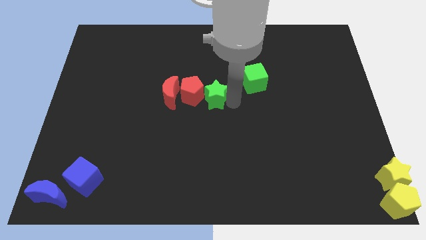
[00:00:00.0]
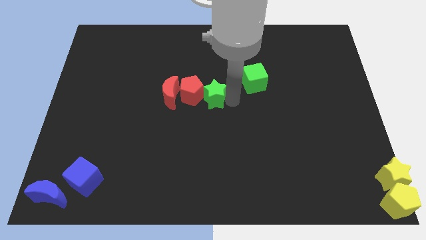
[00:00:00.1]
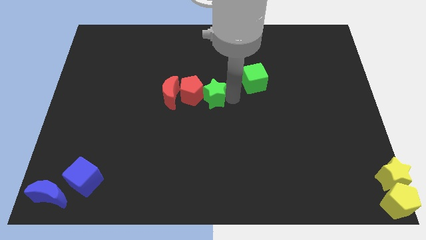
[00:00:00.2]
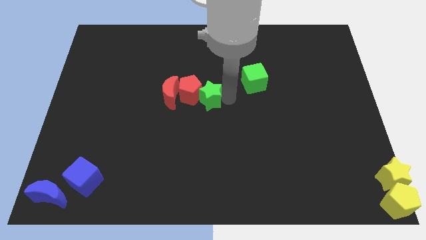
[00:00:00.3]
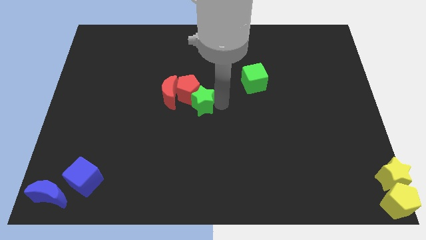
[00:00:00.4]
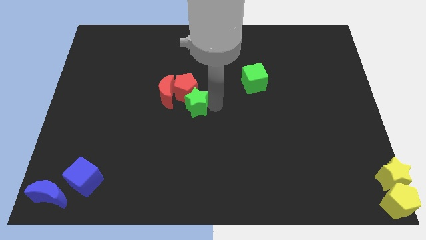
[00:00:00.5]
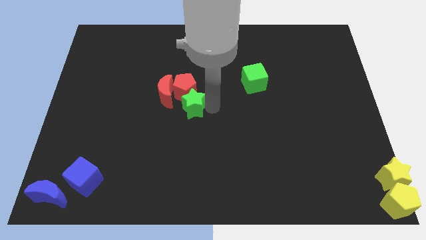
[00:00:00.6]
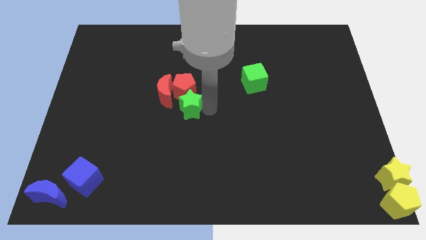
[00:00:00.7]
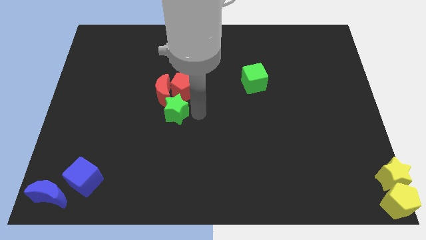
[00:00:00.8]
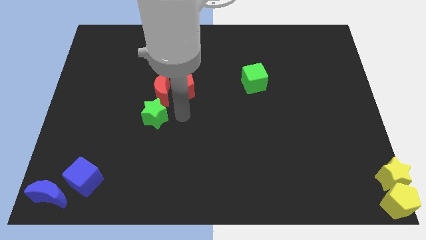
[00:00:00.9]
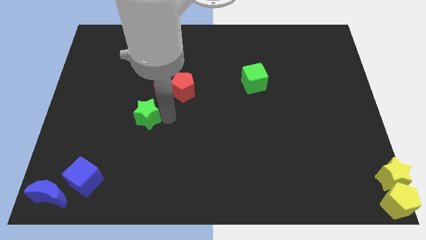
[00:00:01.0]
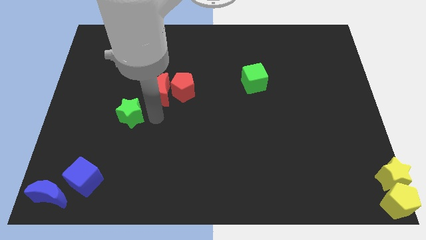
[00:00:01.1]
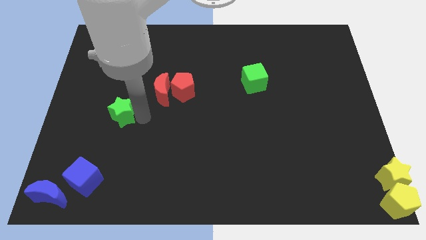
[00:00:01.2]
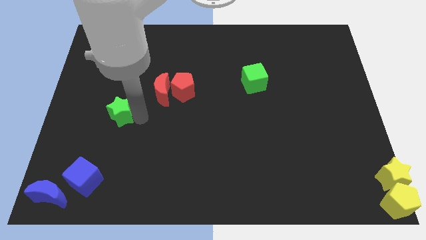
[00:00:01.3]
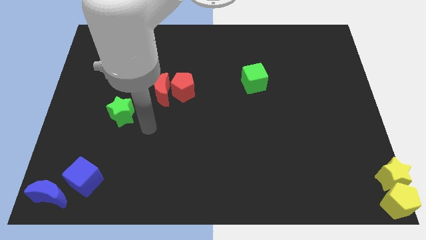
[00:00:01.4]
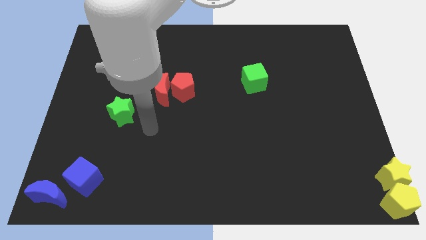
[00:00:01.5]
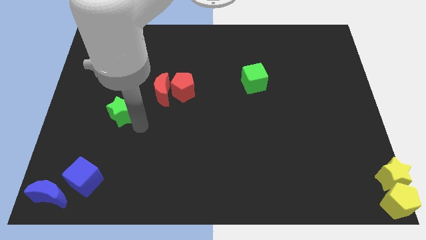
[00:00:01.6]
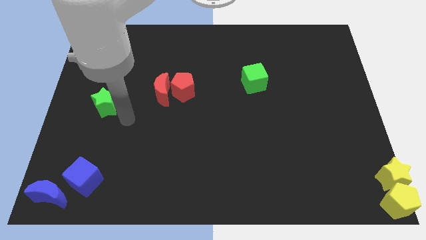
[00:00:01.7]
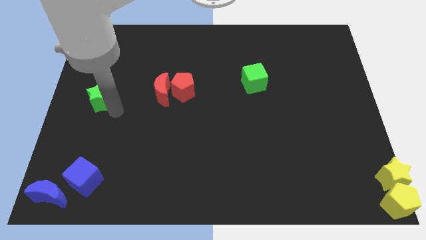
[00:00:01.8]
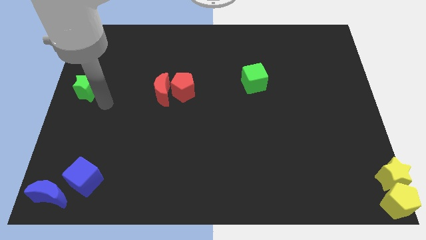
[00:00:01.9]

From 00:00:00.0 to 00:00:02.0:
place the green star to the left of the red blocks

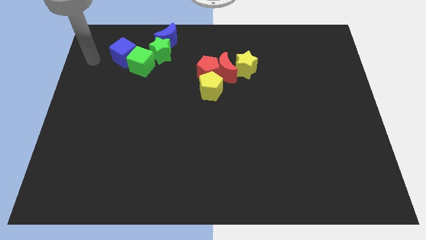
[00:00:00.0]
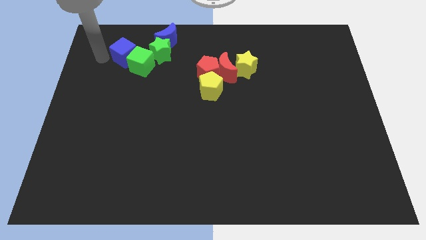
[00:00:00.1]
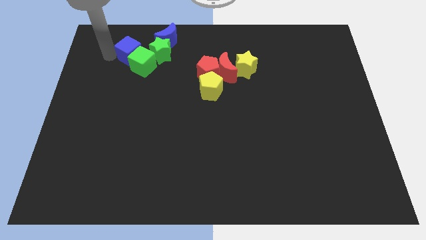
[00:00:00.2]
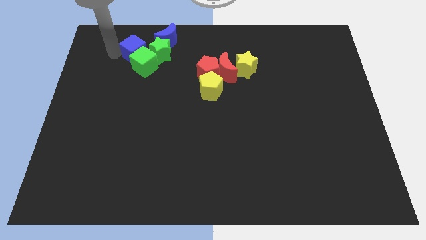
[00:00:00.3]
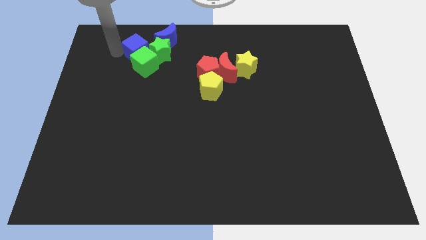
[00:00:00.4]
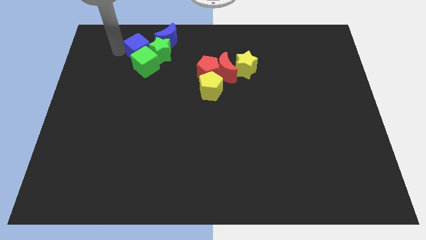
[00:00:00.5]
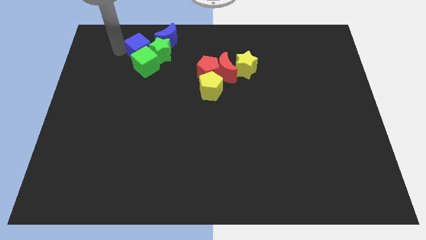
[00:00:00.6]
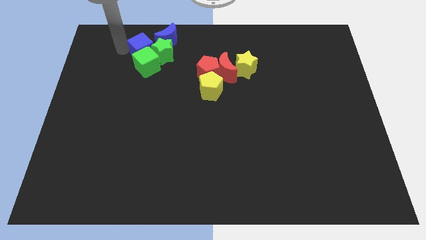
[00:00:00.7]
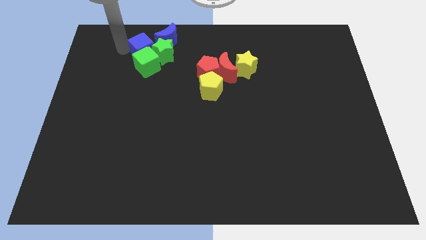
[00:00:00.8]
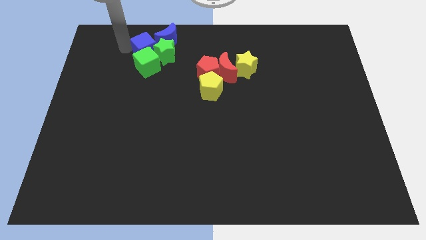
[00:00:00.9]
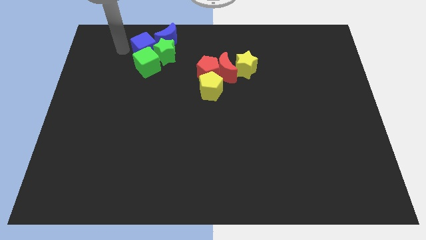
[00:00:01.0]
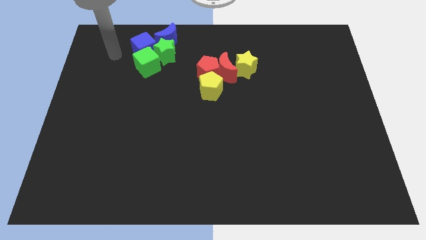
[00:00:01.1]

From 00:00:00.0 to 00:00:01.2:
place the blue cube above the green cube

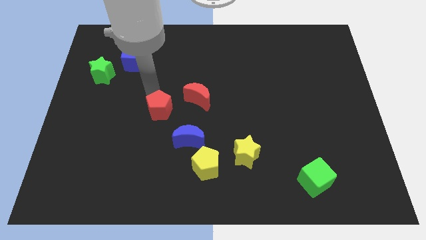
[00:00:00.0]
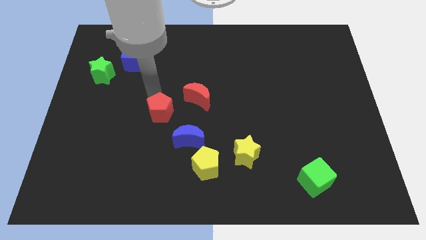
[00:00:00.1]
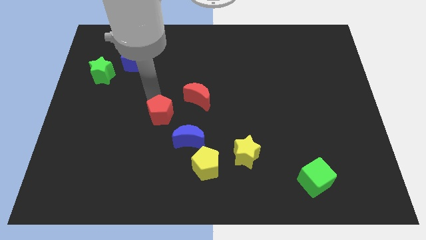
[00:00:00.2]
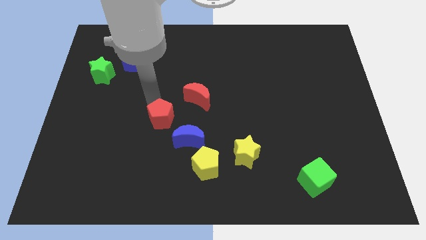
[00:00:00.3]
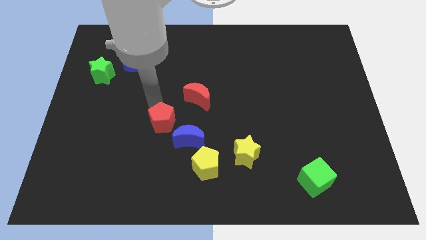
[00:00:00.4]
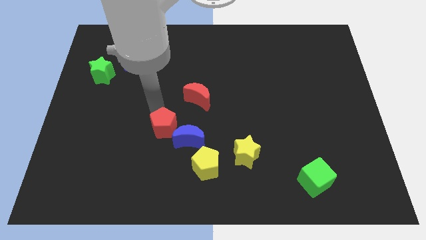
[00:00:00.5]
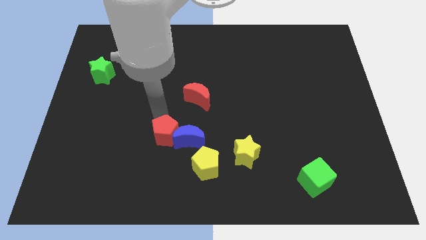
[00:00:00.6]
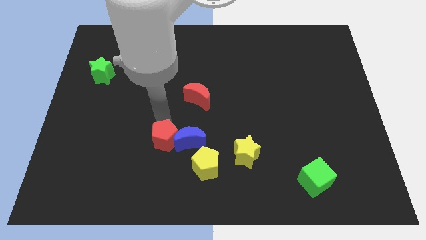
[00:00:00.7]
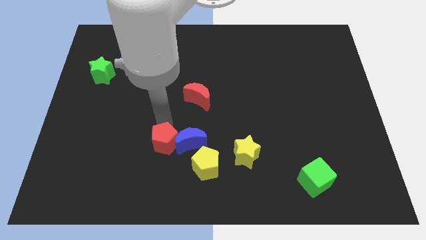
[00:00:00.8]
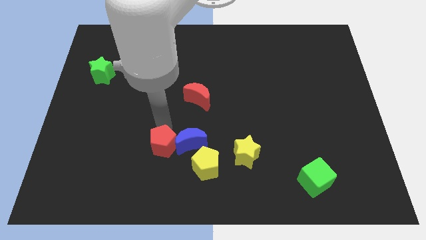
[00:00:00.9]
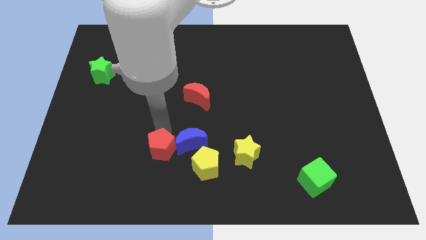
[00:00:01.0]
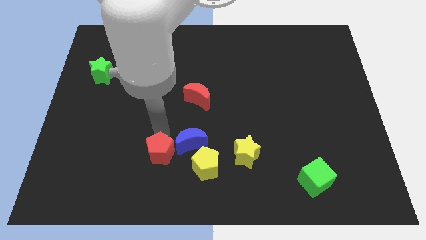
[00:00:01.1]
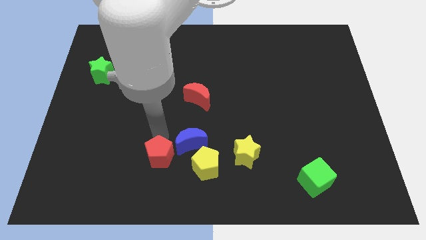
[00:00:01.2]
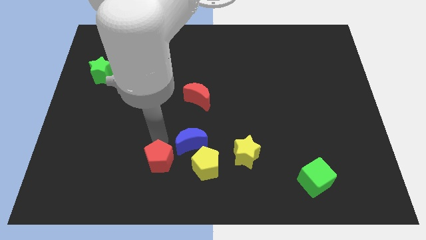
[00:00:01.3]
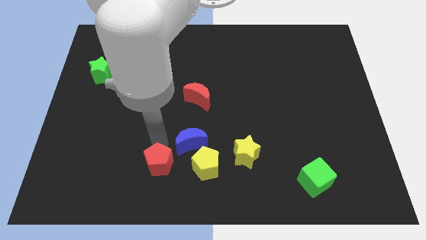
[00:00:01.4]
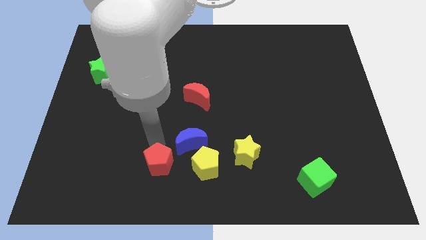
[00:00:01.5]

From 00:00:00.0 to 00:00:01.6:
push the red pentagon right of the blue moon

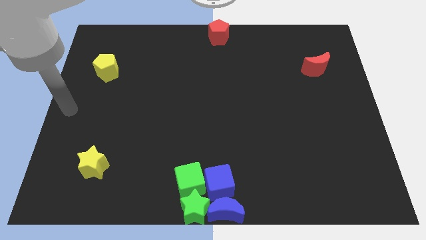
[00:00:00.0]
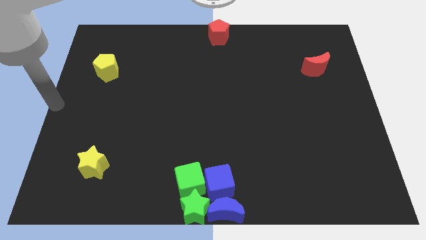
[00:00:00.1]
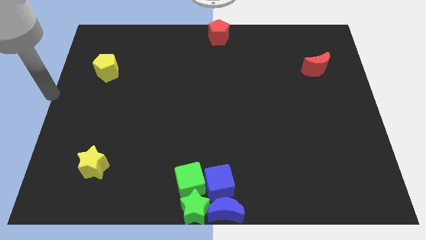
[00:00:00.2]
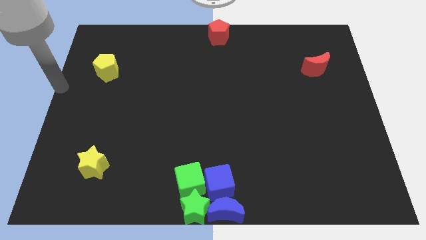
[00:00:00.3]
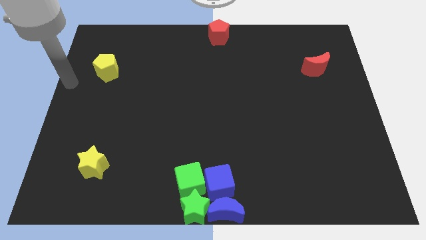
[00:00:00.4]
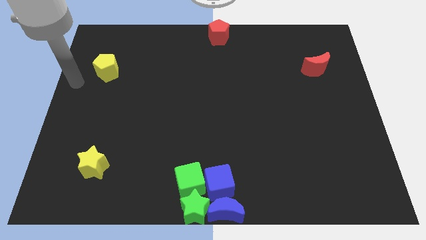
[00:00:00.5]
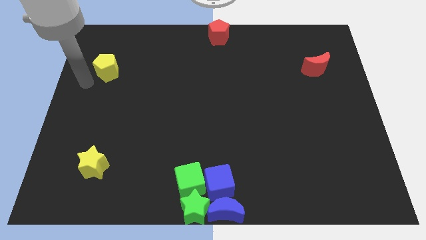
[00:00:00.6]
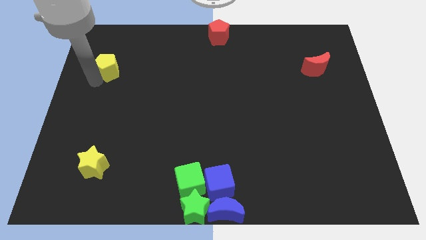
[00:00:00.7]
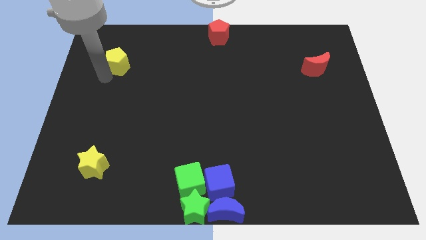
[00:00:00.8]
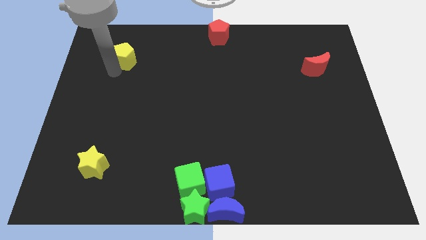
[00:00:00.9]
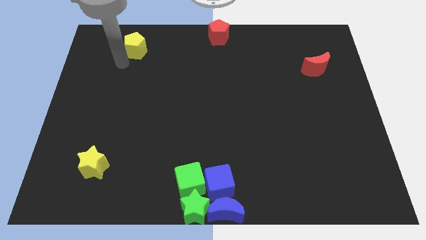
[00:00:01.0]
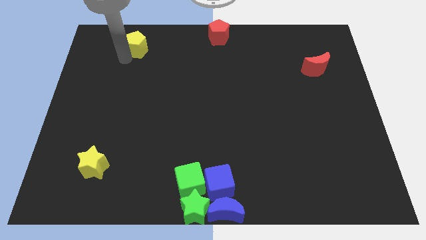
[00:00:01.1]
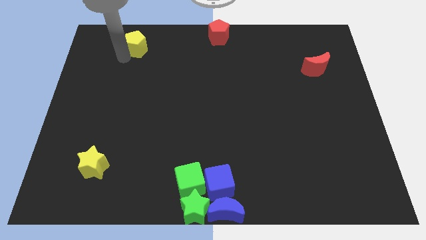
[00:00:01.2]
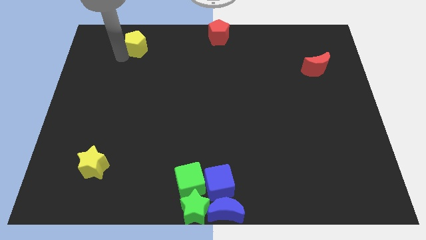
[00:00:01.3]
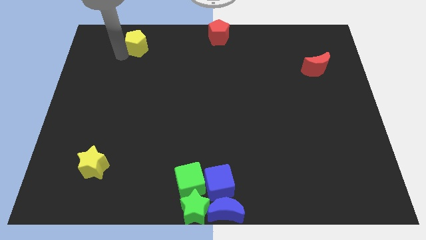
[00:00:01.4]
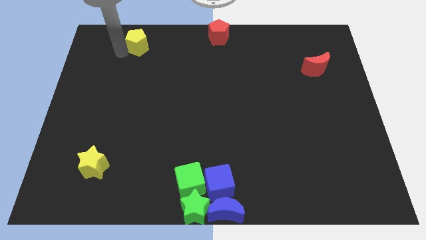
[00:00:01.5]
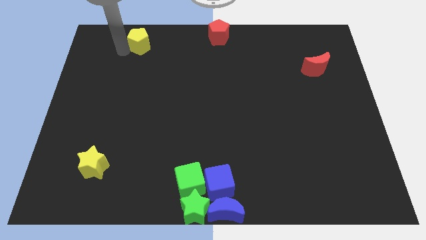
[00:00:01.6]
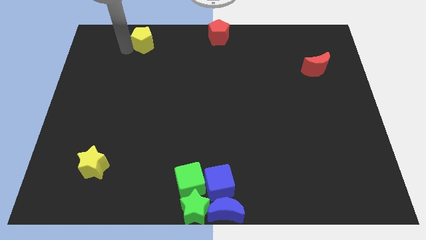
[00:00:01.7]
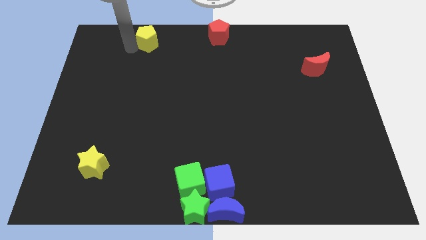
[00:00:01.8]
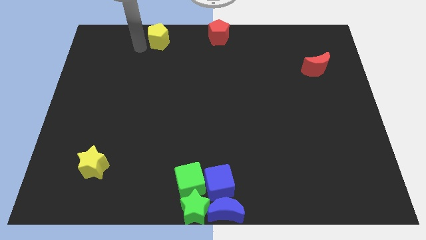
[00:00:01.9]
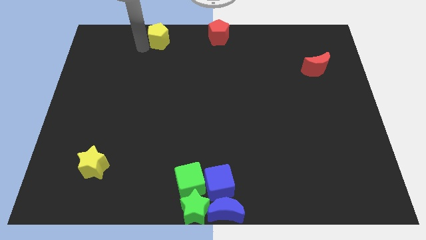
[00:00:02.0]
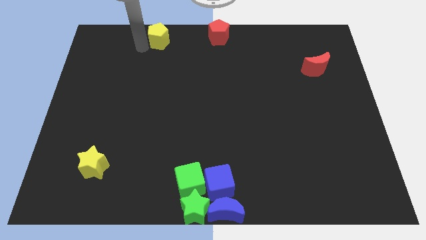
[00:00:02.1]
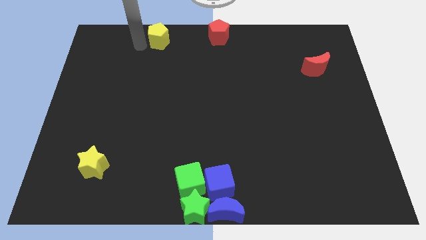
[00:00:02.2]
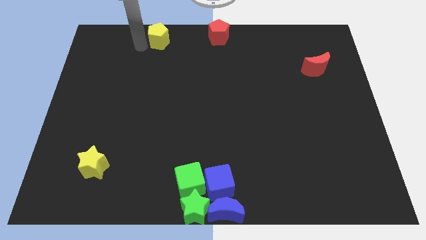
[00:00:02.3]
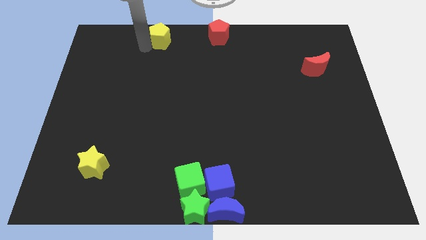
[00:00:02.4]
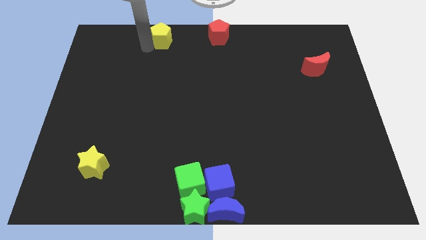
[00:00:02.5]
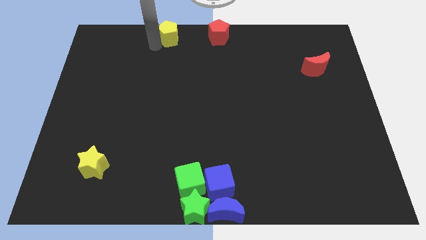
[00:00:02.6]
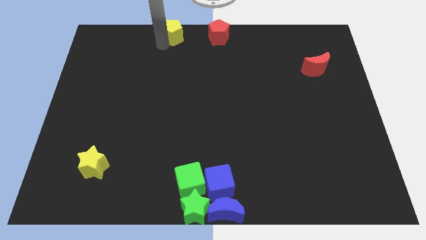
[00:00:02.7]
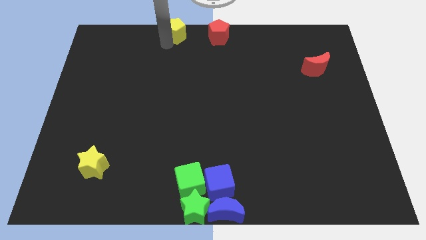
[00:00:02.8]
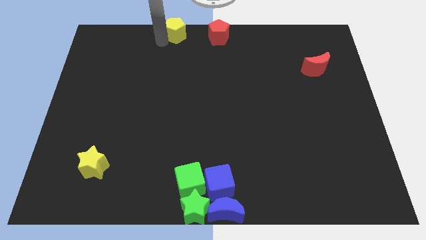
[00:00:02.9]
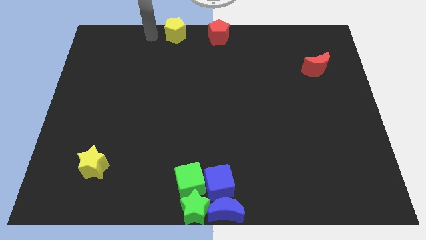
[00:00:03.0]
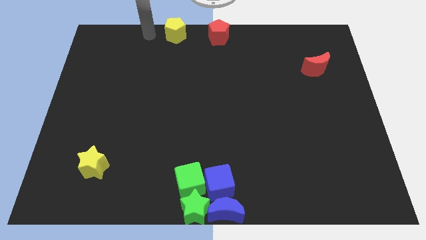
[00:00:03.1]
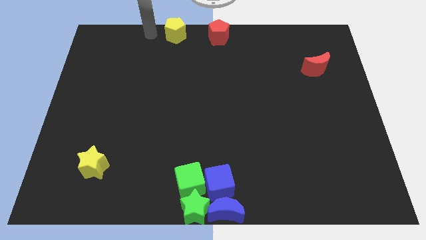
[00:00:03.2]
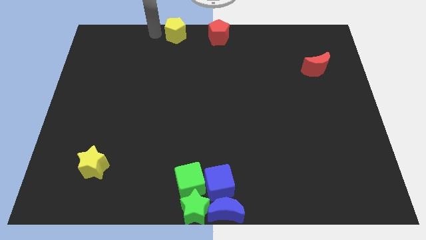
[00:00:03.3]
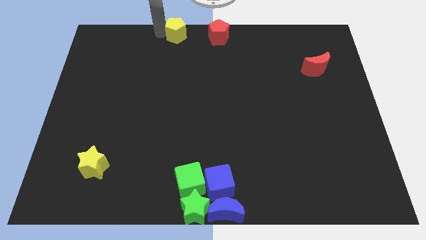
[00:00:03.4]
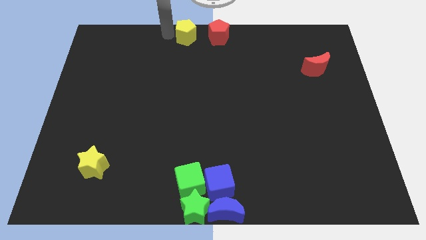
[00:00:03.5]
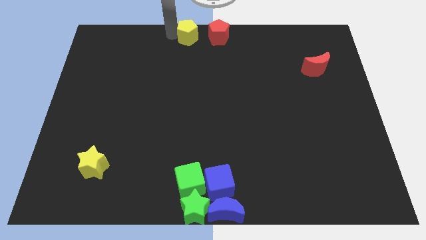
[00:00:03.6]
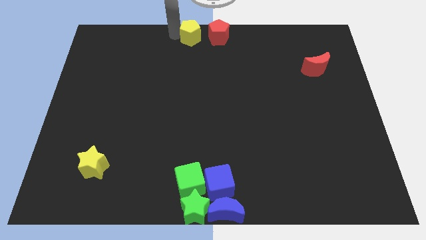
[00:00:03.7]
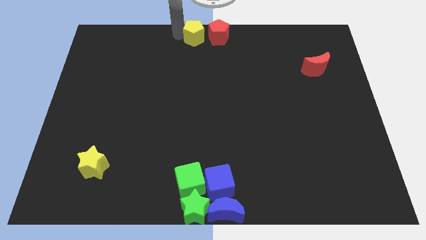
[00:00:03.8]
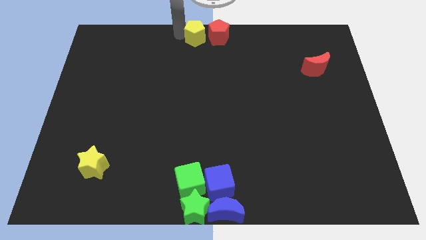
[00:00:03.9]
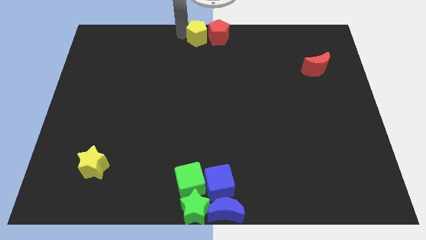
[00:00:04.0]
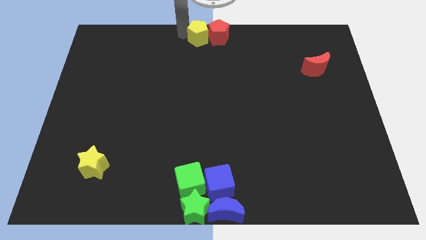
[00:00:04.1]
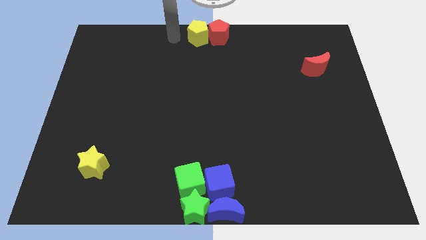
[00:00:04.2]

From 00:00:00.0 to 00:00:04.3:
put the yellow pentagon on the left side of the red pentagon
